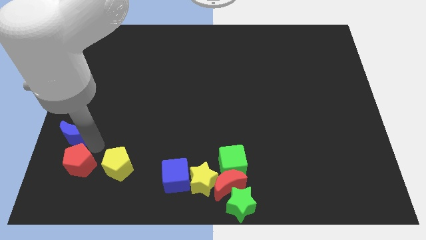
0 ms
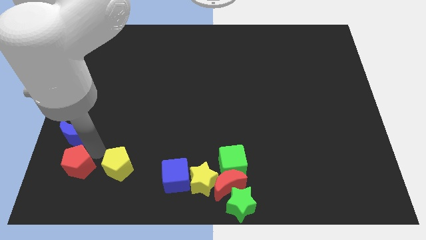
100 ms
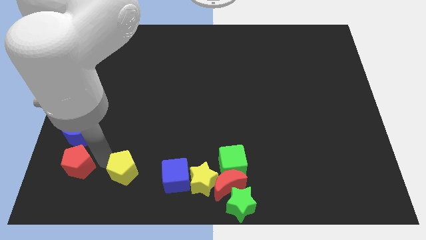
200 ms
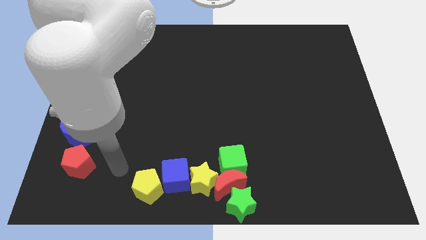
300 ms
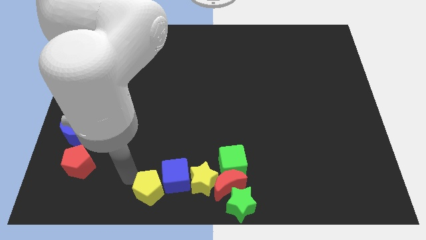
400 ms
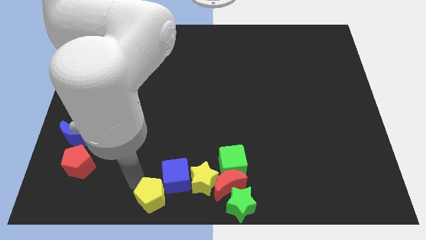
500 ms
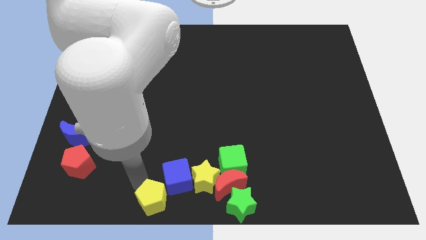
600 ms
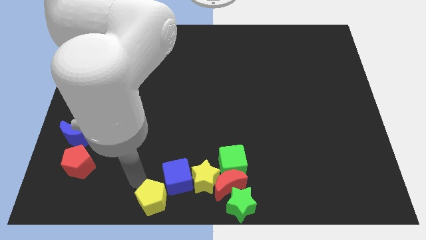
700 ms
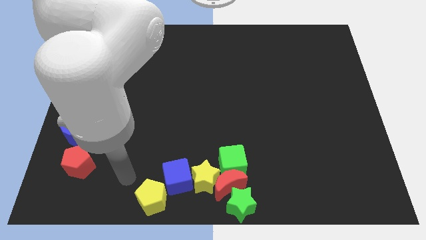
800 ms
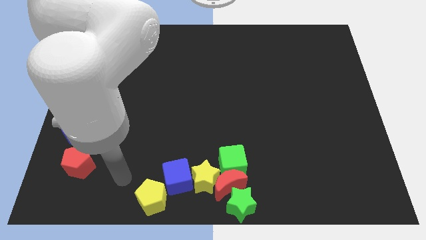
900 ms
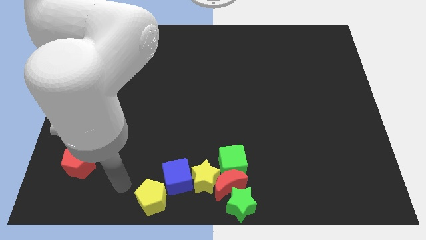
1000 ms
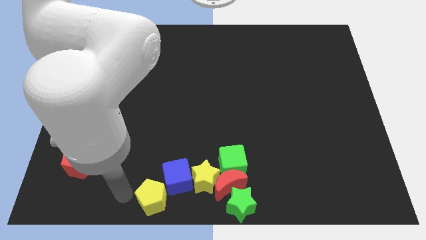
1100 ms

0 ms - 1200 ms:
place yellow pentagon near blue cube

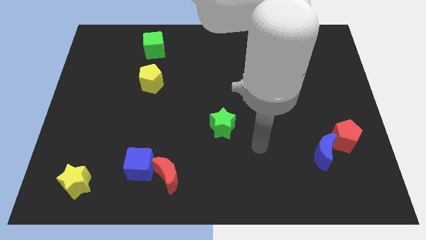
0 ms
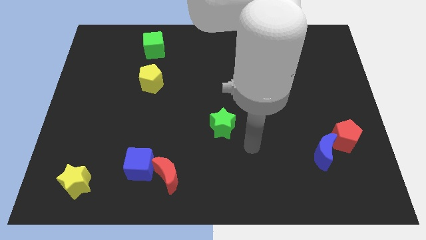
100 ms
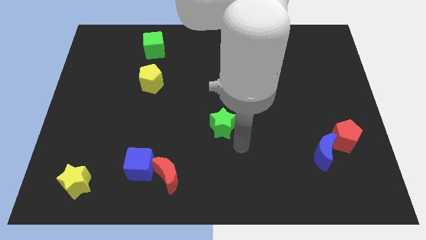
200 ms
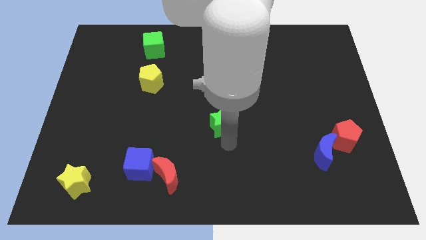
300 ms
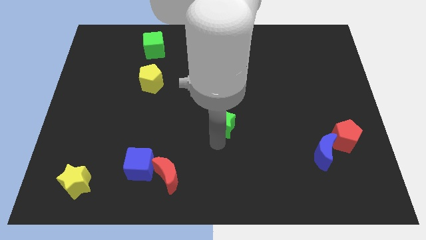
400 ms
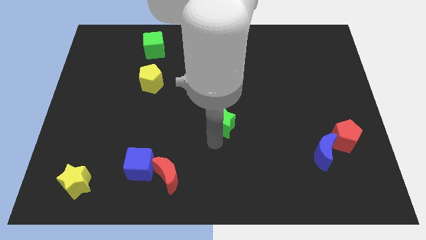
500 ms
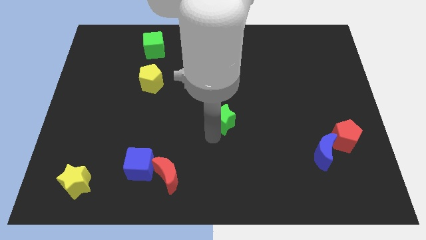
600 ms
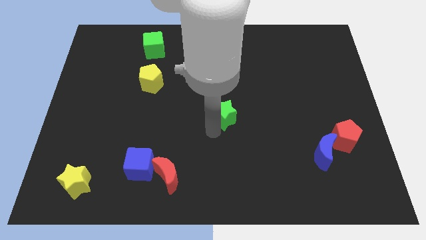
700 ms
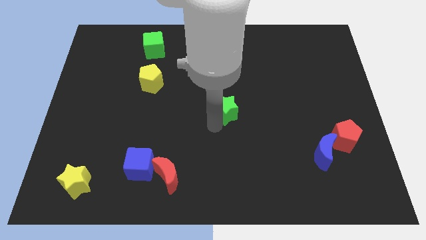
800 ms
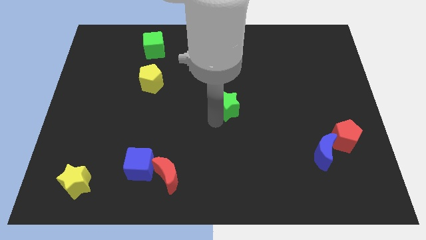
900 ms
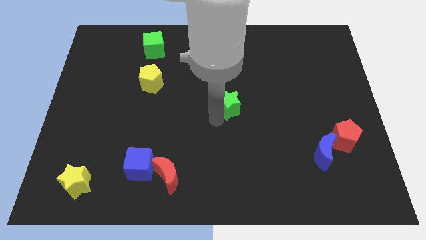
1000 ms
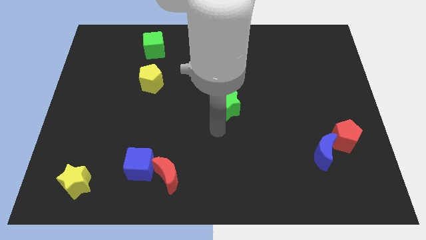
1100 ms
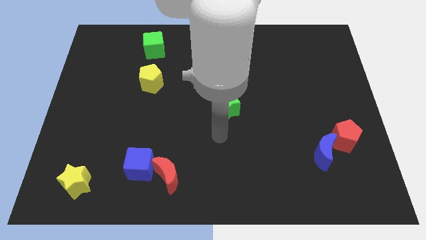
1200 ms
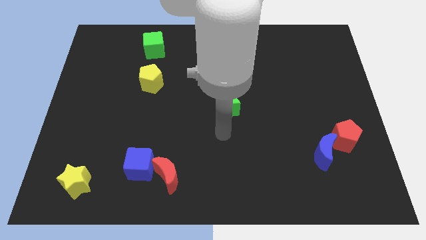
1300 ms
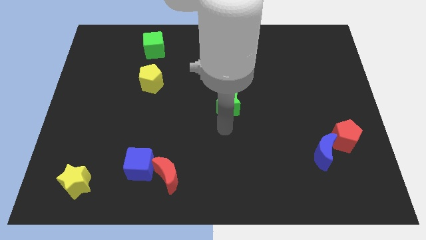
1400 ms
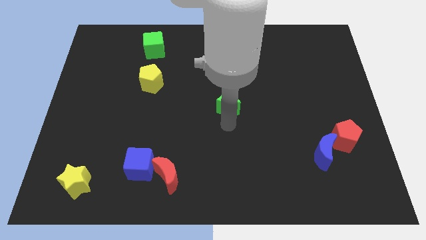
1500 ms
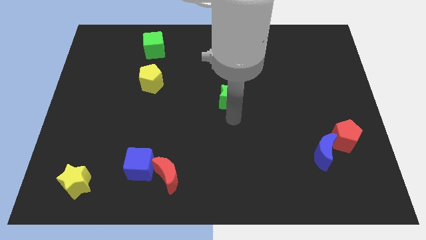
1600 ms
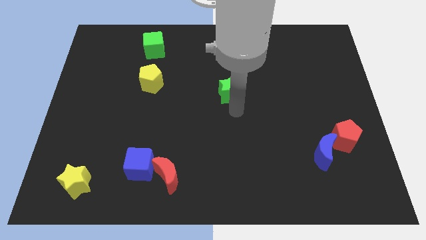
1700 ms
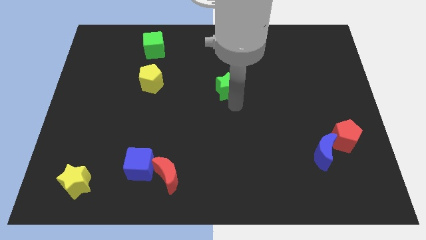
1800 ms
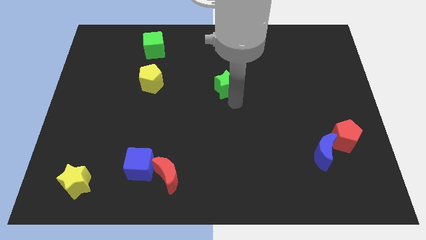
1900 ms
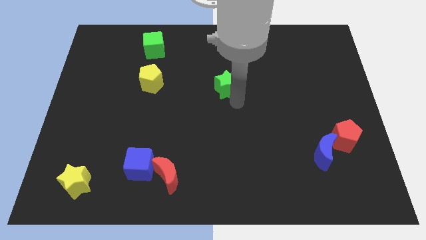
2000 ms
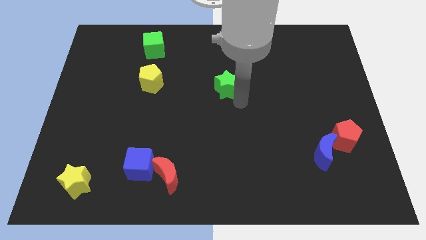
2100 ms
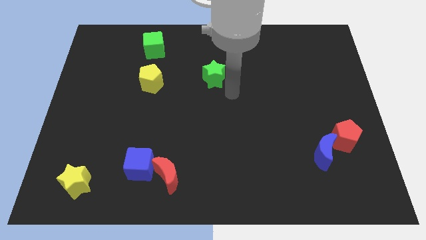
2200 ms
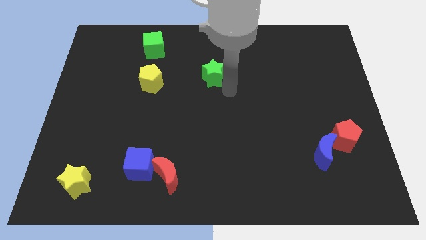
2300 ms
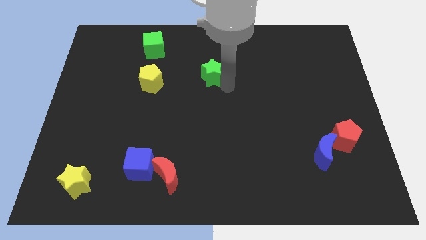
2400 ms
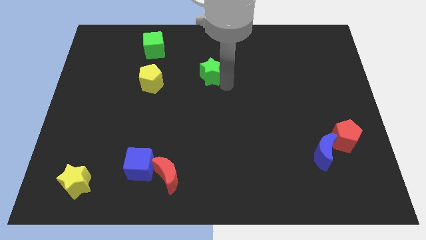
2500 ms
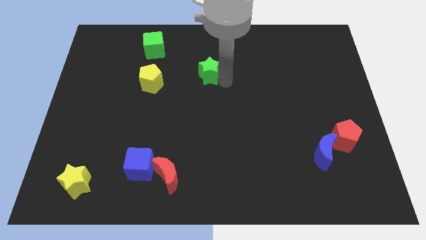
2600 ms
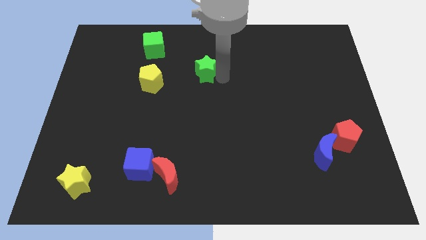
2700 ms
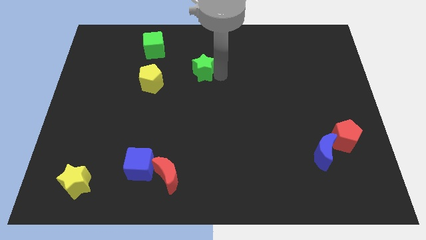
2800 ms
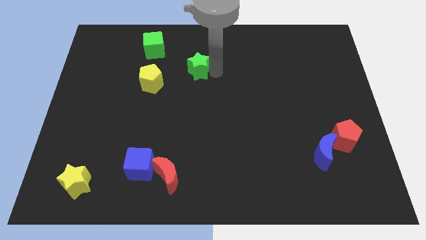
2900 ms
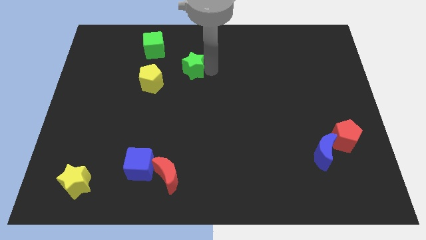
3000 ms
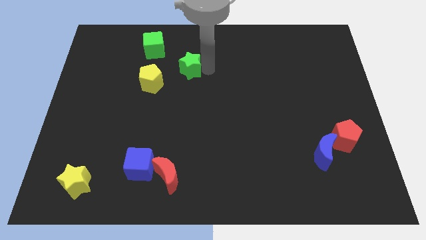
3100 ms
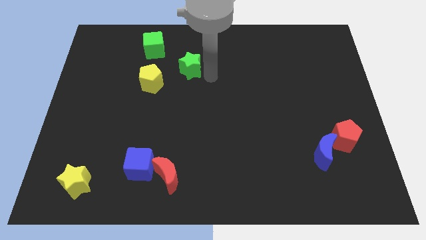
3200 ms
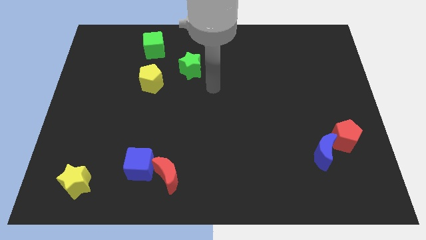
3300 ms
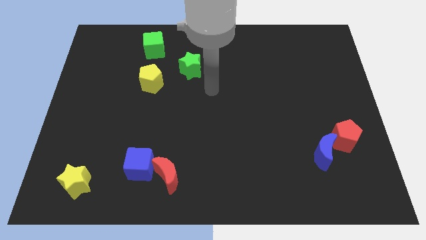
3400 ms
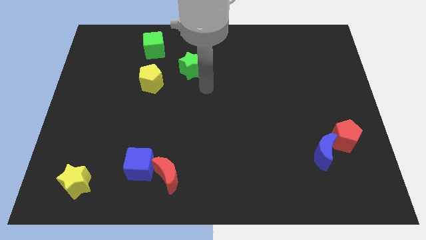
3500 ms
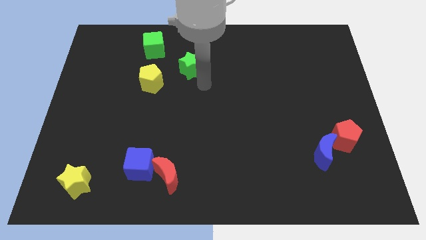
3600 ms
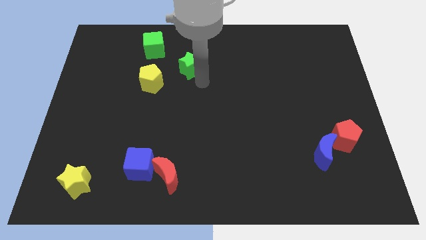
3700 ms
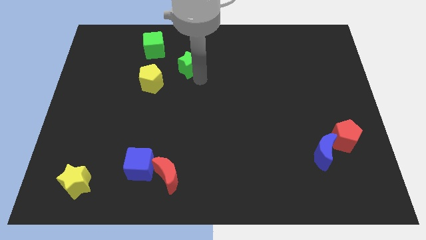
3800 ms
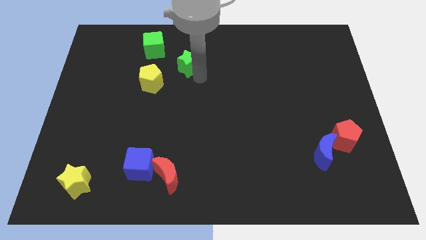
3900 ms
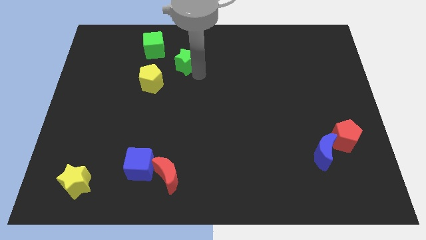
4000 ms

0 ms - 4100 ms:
move green star towards green cube

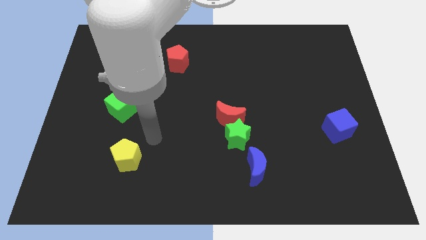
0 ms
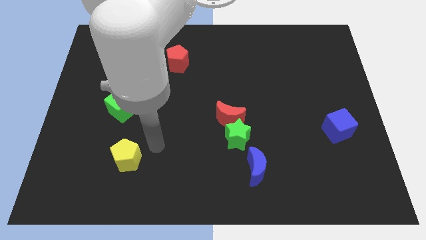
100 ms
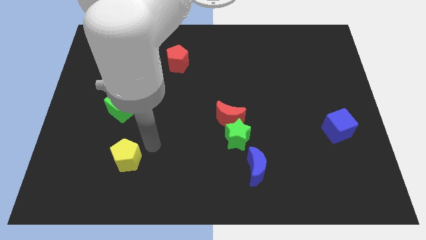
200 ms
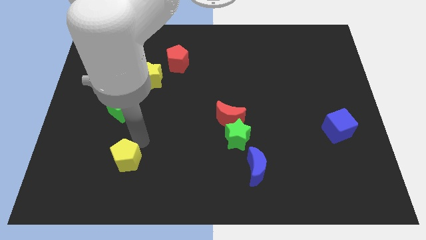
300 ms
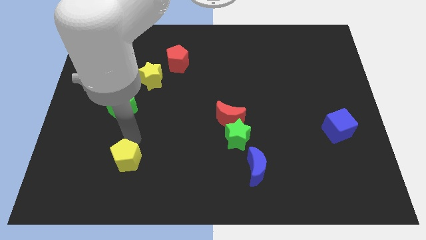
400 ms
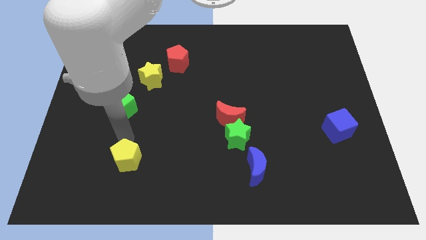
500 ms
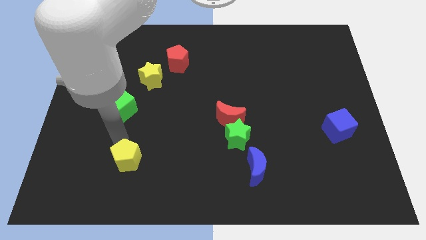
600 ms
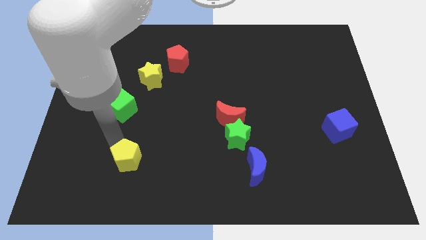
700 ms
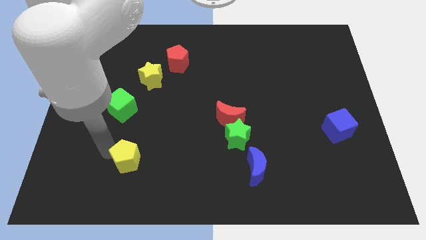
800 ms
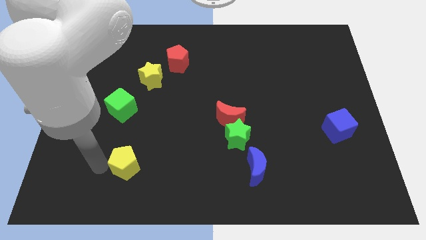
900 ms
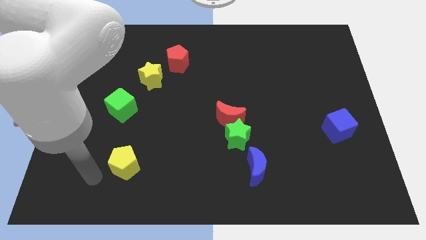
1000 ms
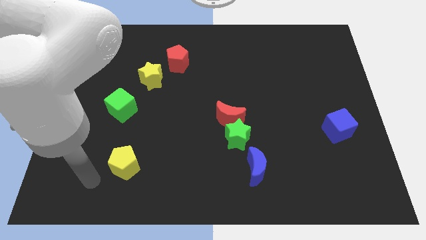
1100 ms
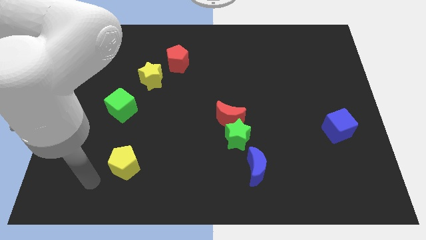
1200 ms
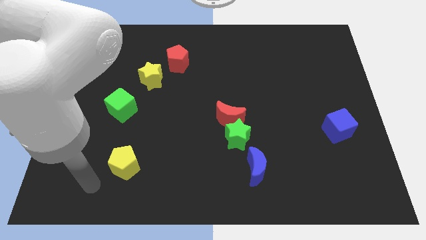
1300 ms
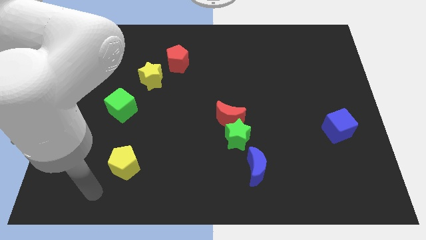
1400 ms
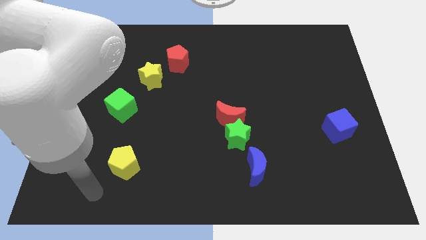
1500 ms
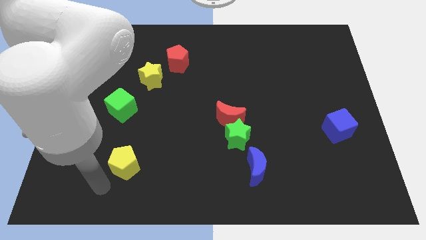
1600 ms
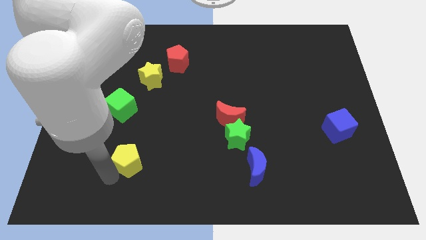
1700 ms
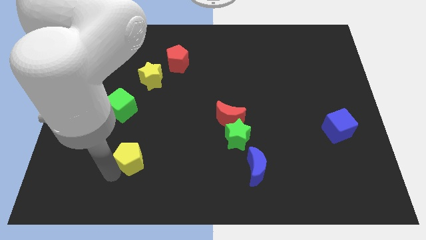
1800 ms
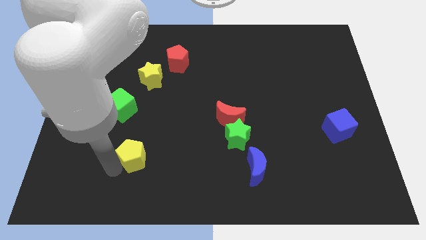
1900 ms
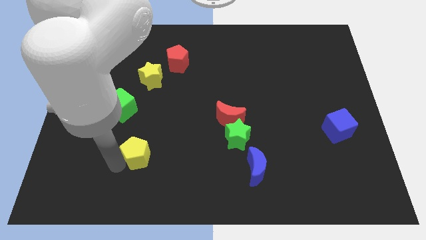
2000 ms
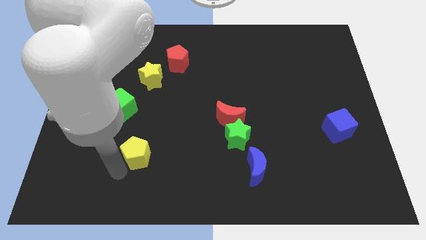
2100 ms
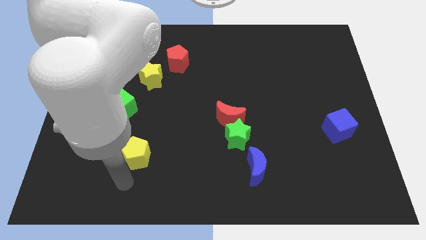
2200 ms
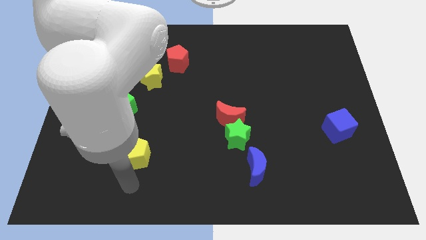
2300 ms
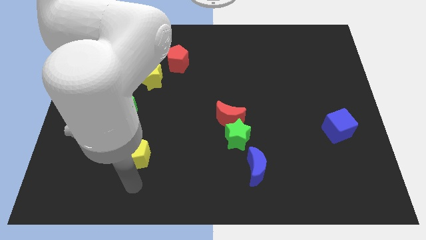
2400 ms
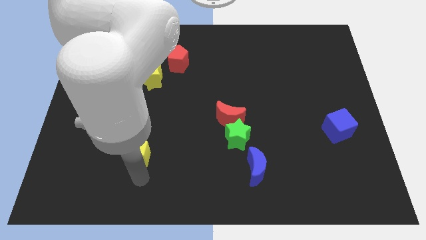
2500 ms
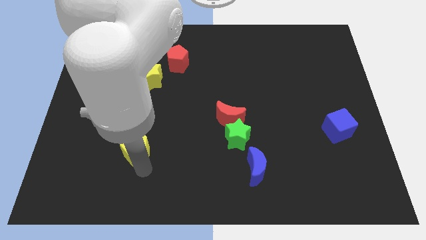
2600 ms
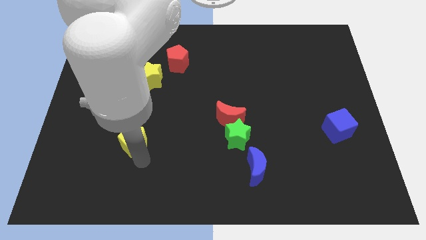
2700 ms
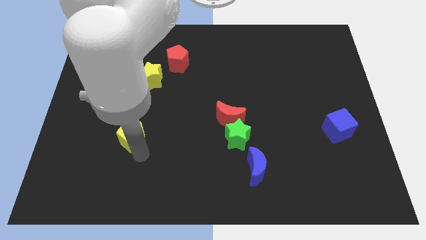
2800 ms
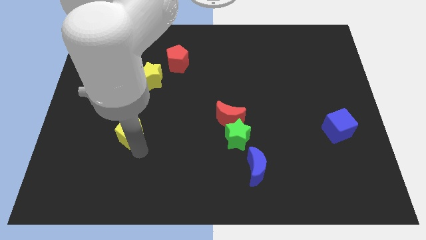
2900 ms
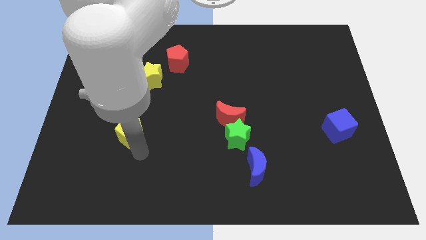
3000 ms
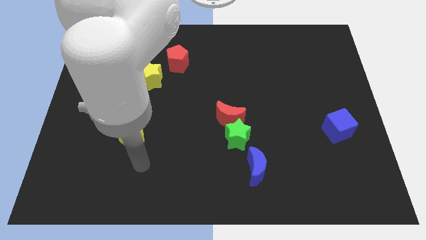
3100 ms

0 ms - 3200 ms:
push yellow pentagon towards green cube

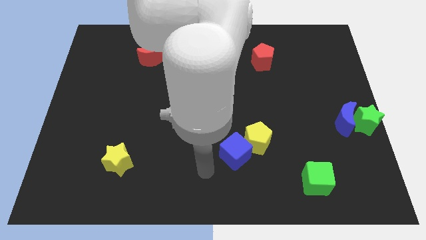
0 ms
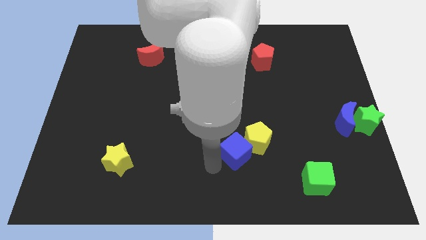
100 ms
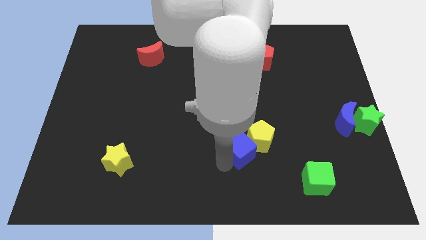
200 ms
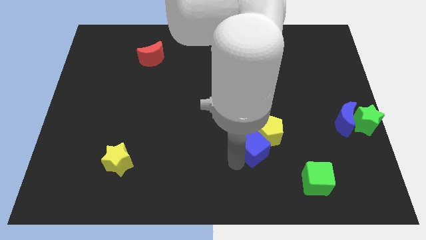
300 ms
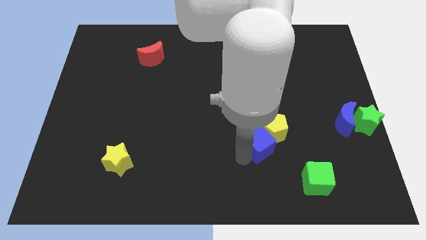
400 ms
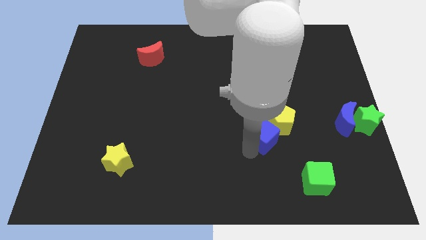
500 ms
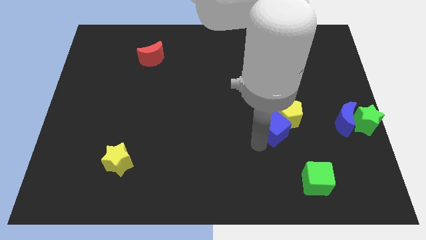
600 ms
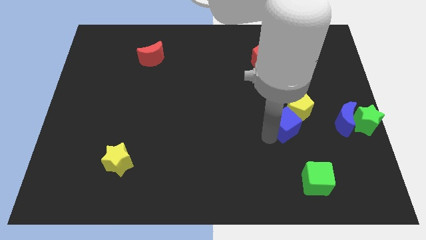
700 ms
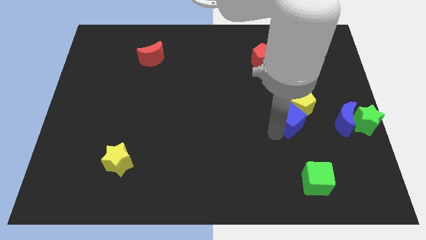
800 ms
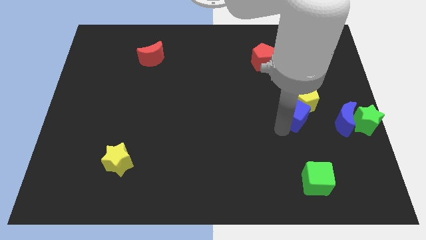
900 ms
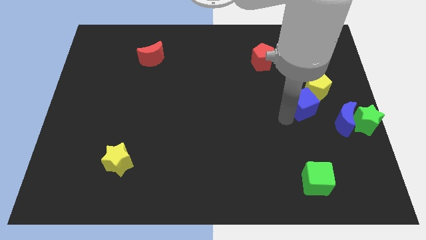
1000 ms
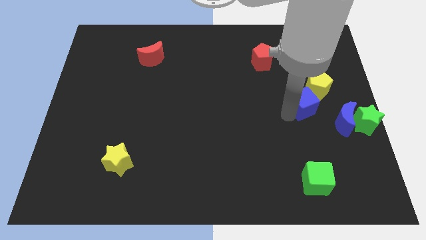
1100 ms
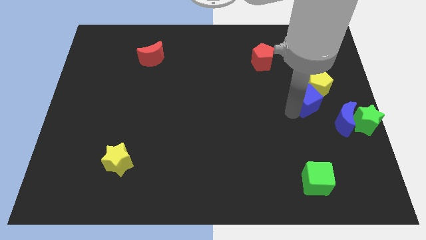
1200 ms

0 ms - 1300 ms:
move the blue cube along with the yellow pentagon towards the top right
